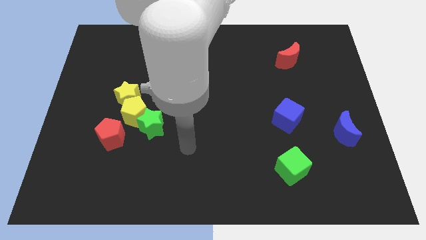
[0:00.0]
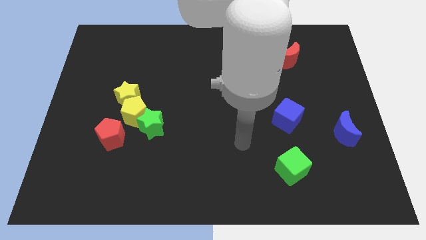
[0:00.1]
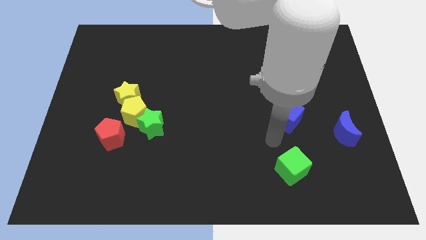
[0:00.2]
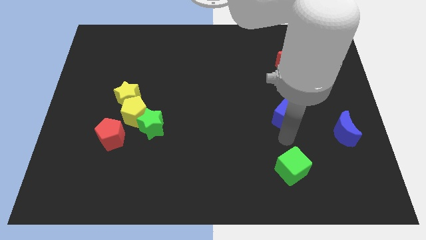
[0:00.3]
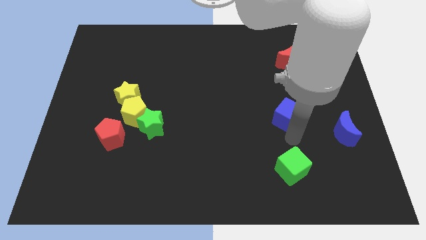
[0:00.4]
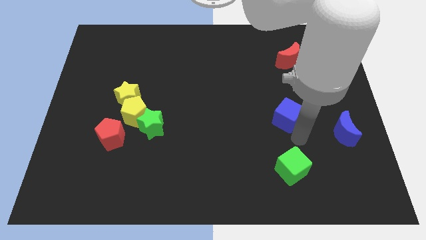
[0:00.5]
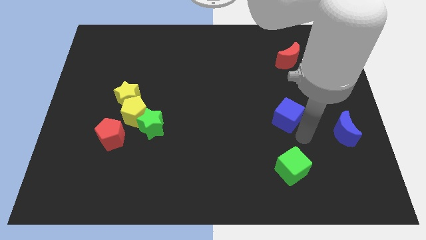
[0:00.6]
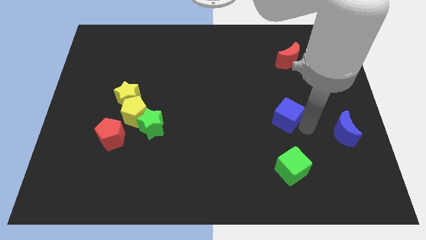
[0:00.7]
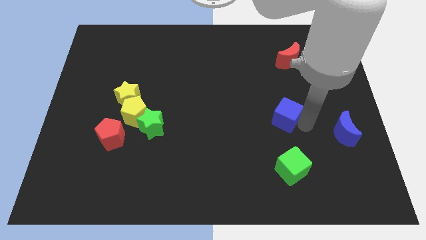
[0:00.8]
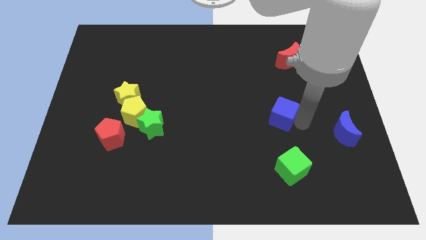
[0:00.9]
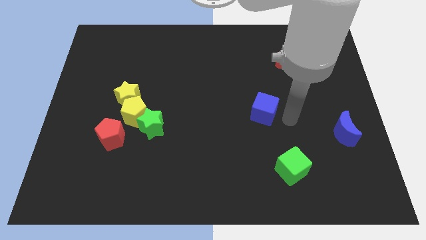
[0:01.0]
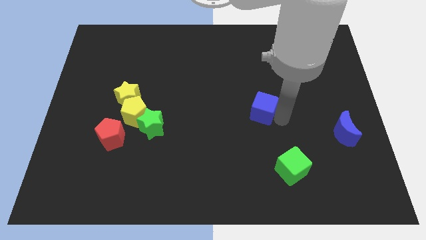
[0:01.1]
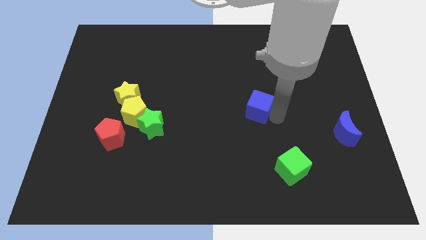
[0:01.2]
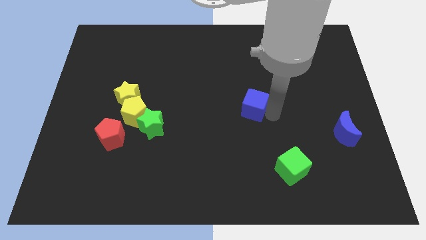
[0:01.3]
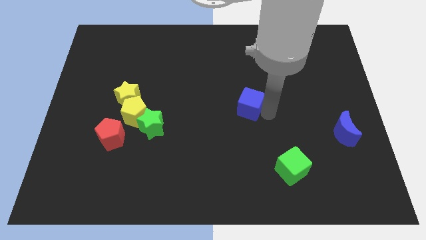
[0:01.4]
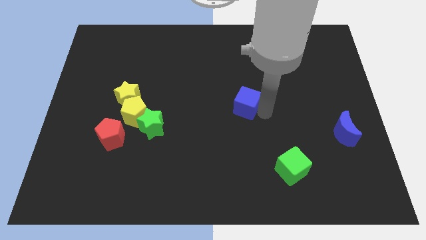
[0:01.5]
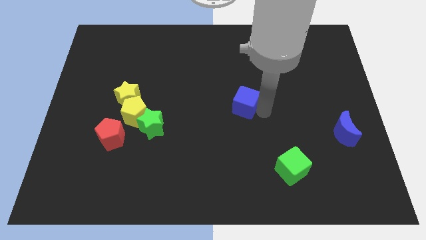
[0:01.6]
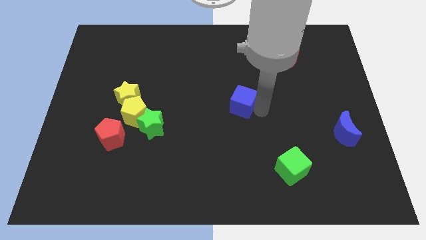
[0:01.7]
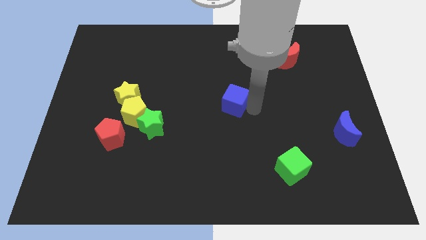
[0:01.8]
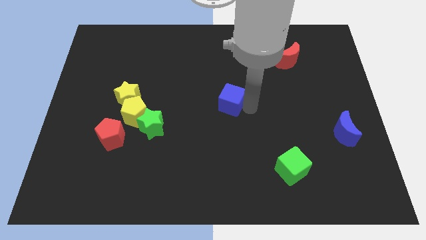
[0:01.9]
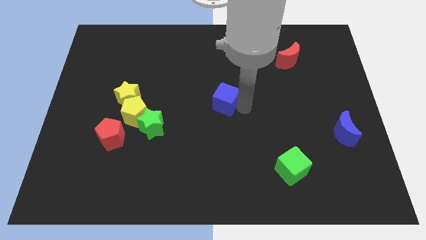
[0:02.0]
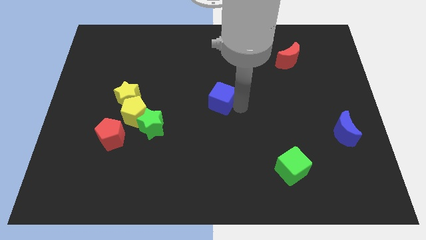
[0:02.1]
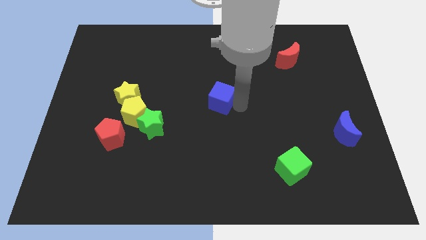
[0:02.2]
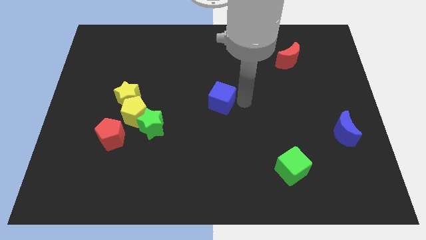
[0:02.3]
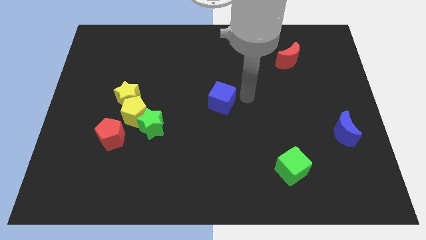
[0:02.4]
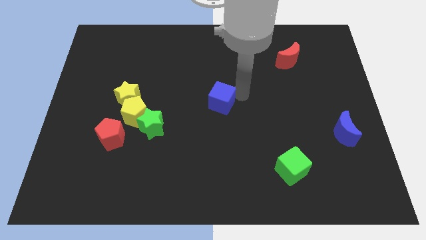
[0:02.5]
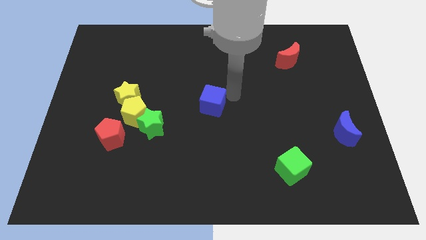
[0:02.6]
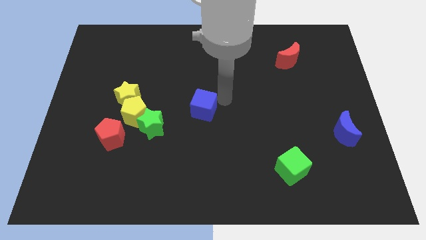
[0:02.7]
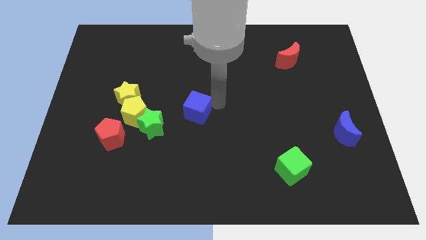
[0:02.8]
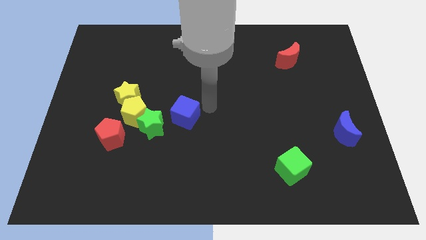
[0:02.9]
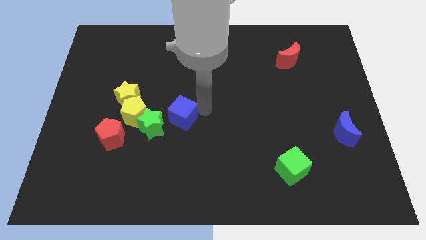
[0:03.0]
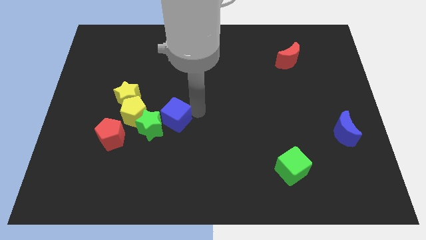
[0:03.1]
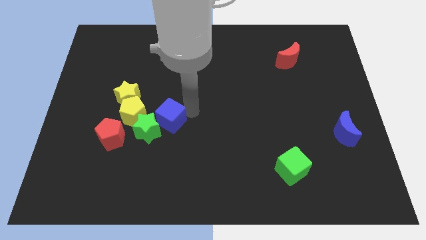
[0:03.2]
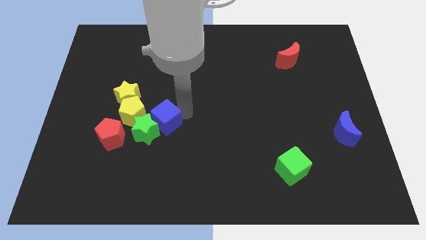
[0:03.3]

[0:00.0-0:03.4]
push the blue cube next to the green star

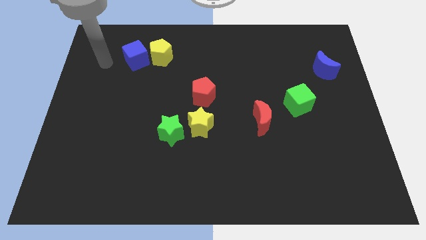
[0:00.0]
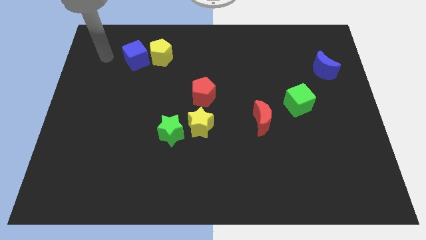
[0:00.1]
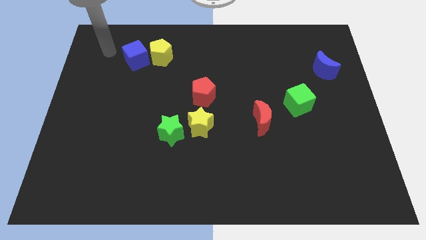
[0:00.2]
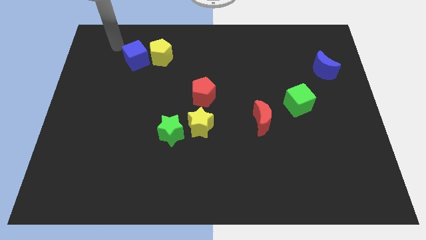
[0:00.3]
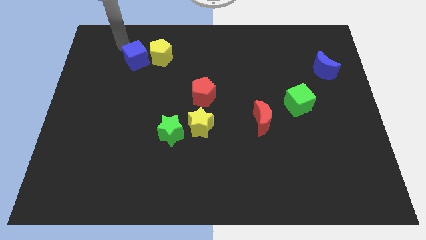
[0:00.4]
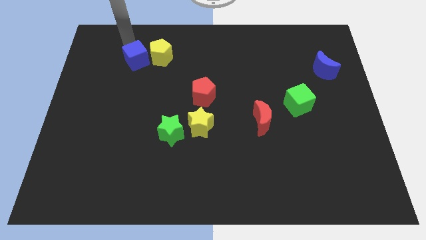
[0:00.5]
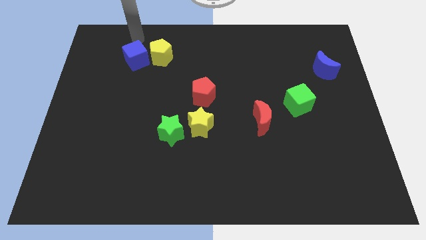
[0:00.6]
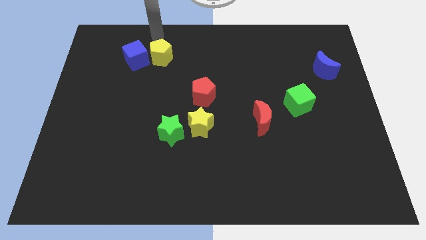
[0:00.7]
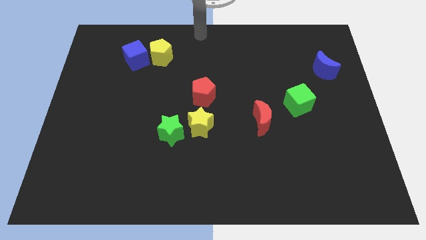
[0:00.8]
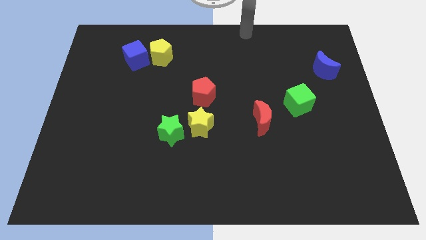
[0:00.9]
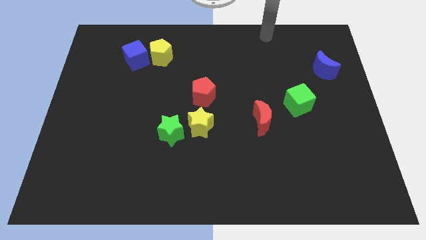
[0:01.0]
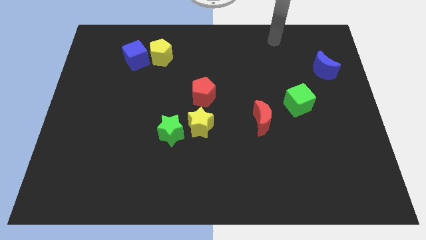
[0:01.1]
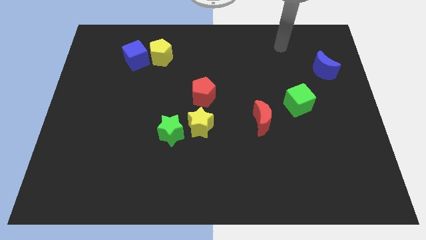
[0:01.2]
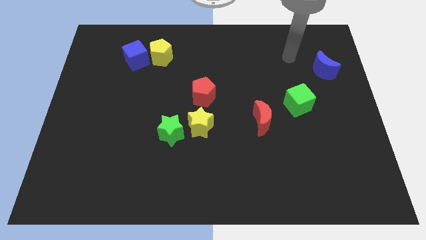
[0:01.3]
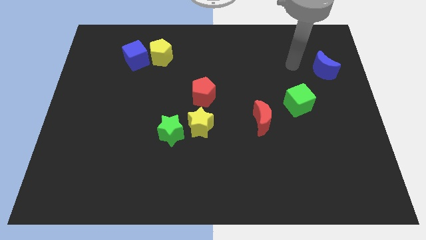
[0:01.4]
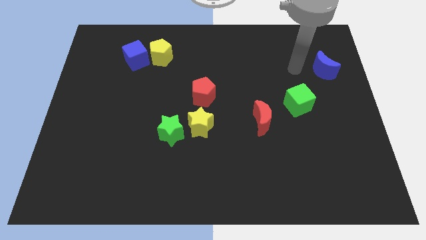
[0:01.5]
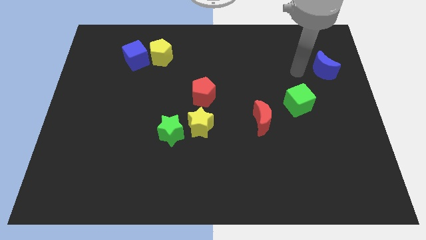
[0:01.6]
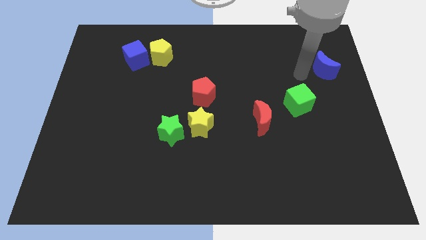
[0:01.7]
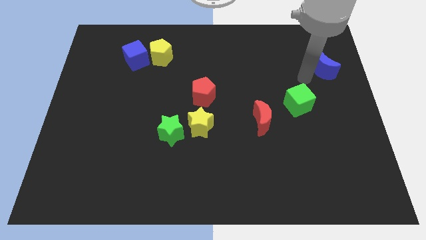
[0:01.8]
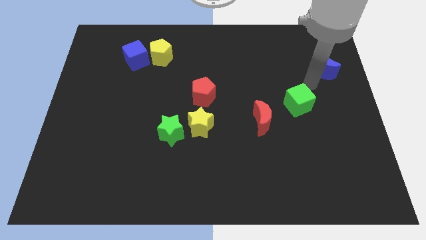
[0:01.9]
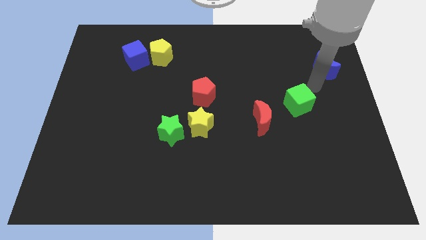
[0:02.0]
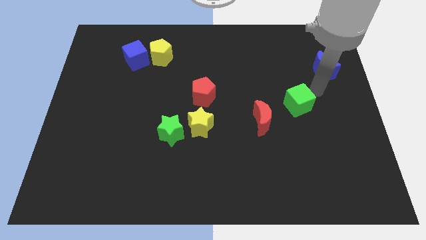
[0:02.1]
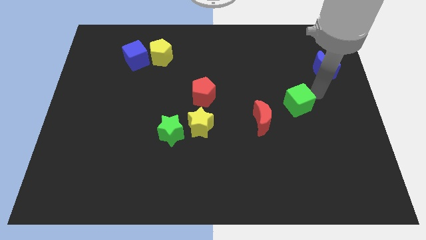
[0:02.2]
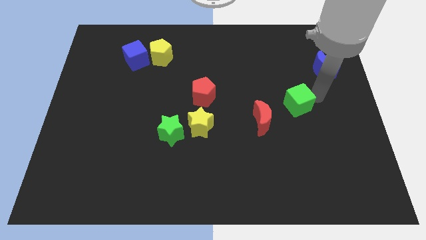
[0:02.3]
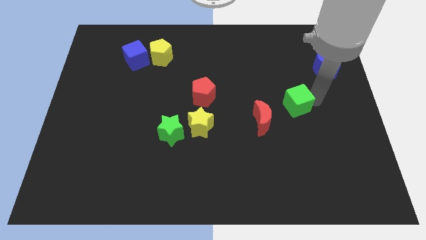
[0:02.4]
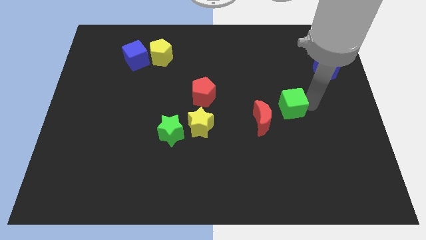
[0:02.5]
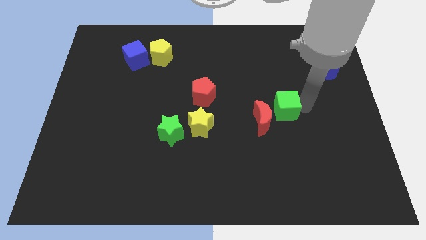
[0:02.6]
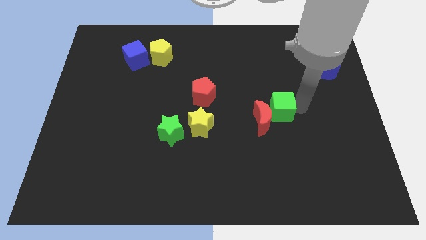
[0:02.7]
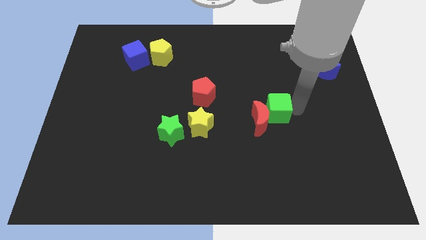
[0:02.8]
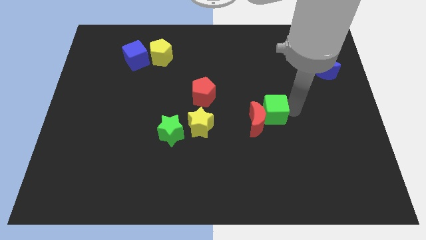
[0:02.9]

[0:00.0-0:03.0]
slide the green cube to the red moon

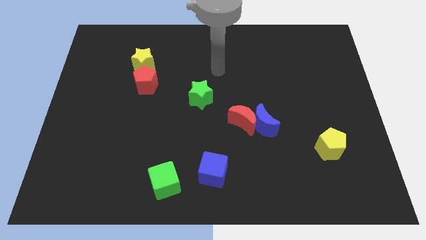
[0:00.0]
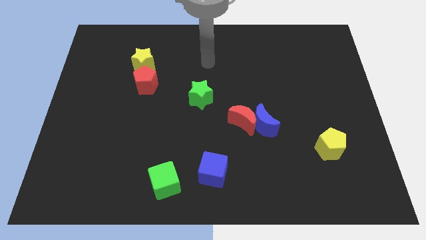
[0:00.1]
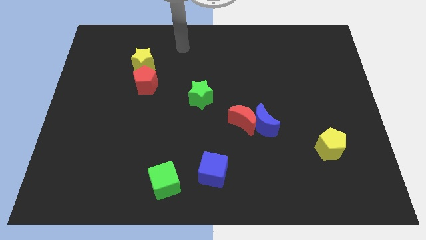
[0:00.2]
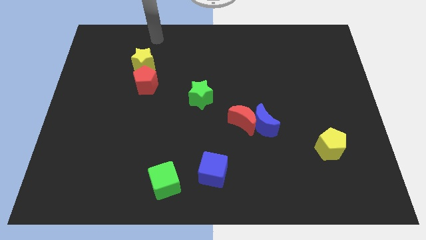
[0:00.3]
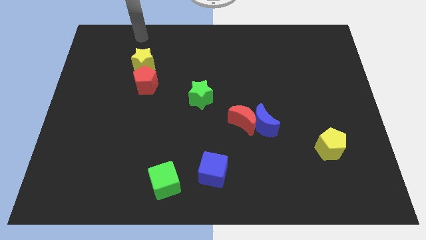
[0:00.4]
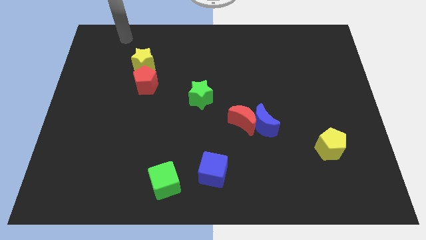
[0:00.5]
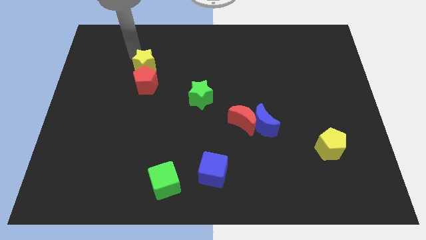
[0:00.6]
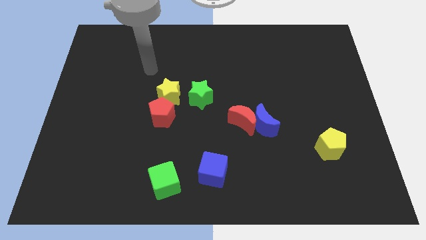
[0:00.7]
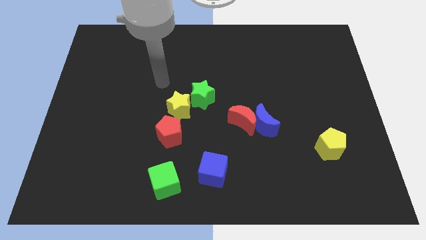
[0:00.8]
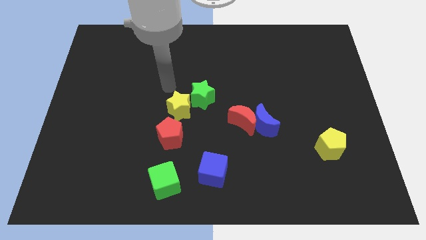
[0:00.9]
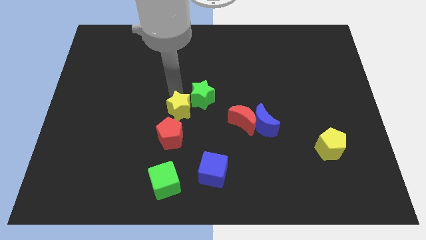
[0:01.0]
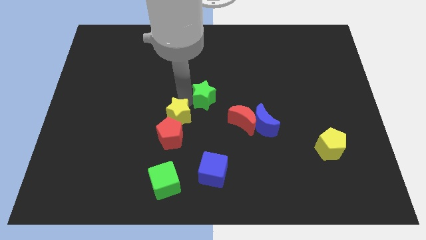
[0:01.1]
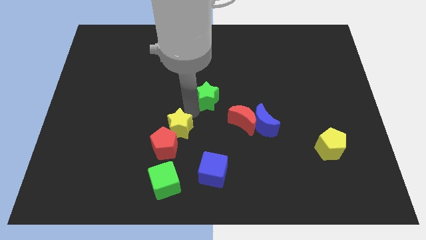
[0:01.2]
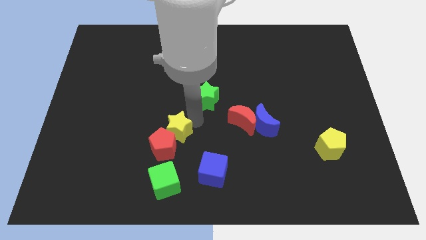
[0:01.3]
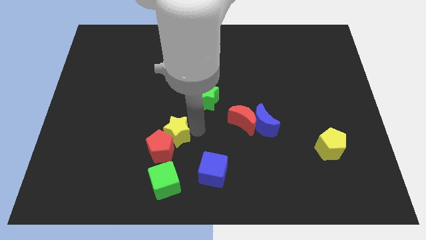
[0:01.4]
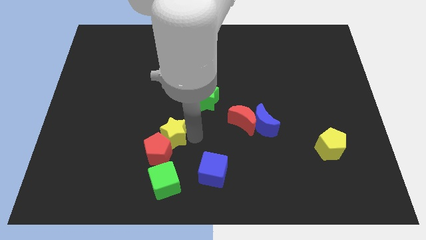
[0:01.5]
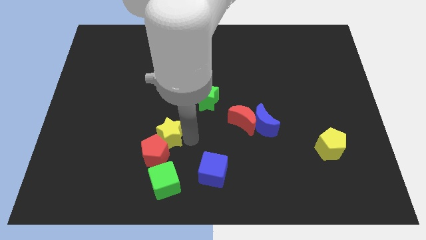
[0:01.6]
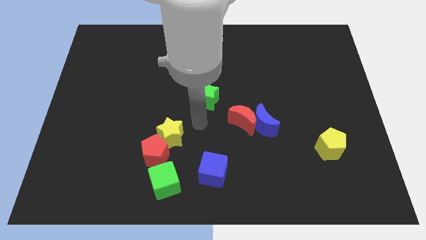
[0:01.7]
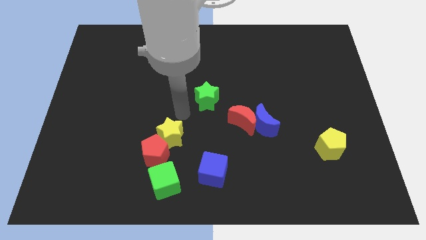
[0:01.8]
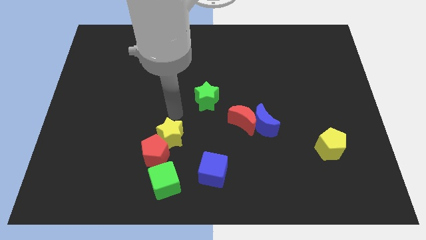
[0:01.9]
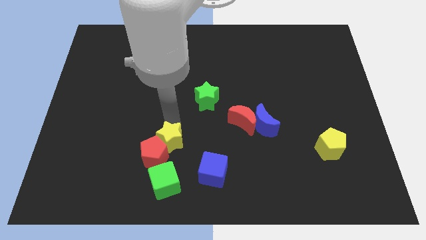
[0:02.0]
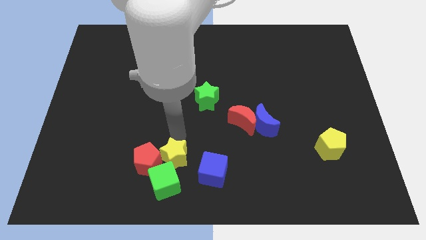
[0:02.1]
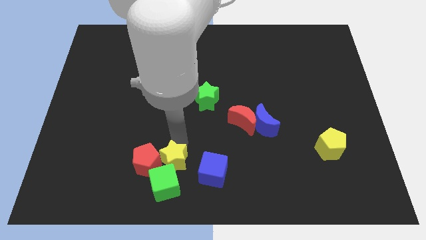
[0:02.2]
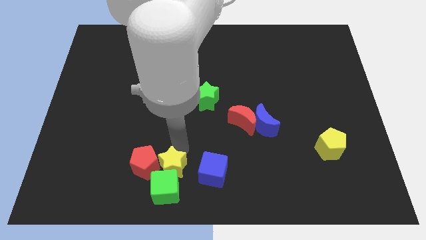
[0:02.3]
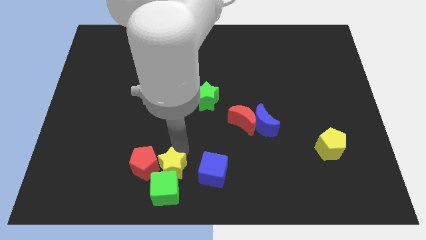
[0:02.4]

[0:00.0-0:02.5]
move the yellow star close to the green cube
